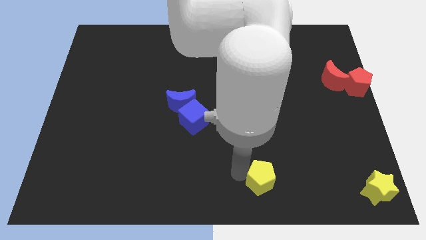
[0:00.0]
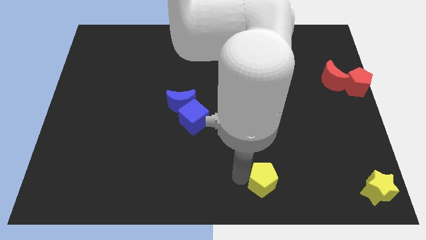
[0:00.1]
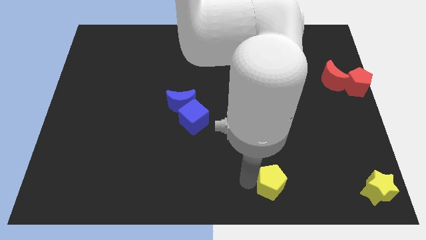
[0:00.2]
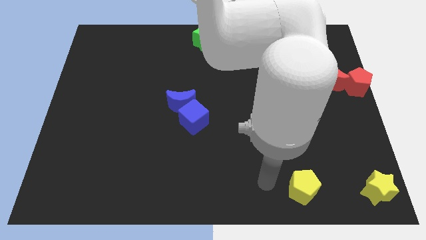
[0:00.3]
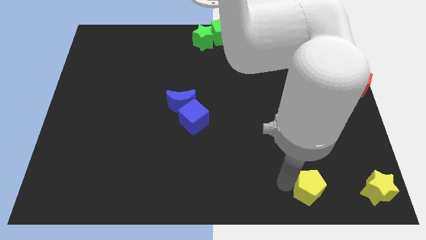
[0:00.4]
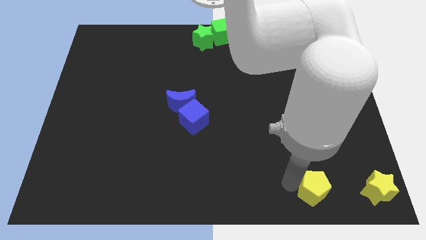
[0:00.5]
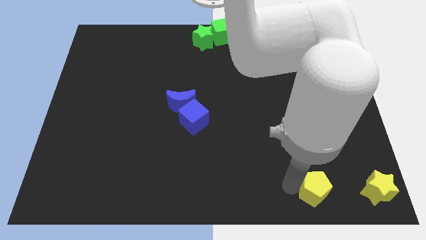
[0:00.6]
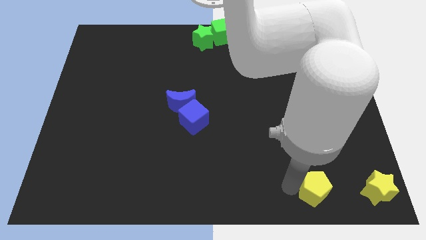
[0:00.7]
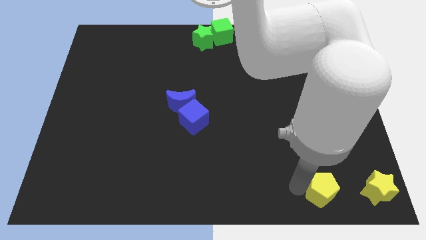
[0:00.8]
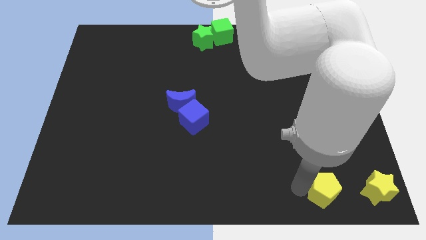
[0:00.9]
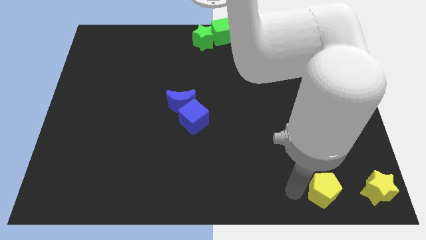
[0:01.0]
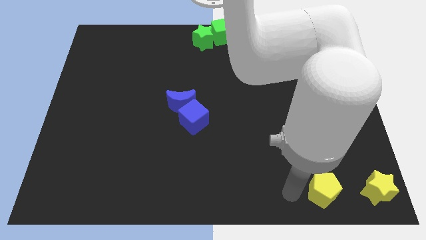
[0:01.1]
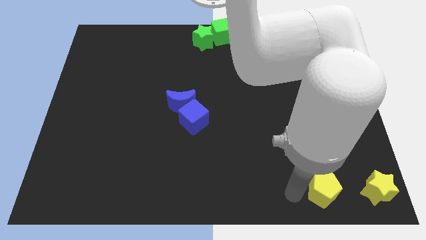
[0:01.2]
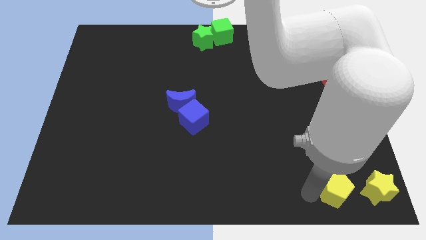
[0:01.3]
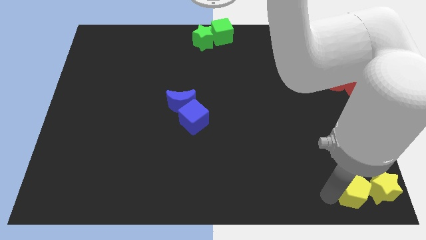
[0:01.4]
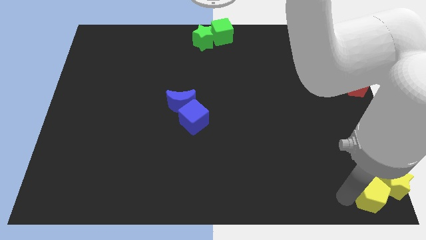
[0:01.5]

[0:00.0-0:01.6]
move the yellow pentagon into the yellow star

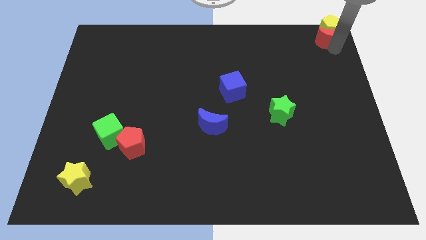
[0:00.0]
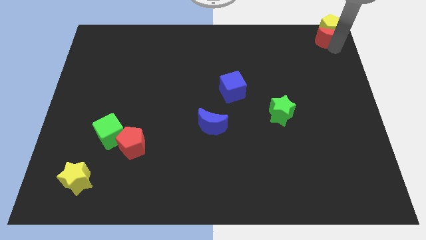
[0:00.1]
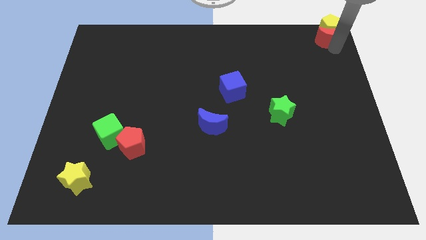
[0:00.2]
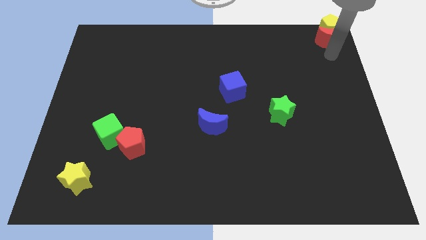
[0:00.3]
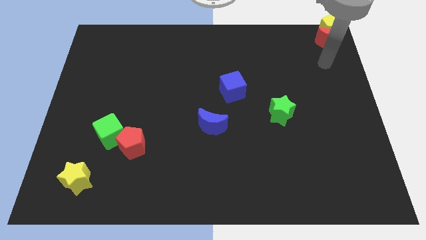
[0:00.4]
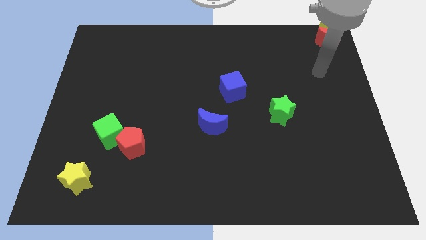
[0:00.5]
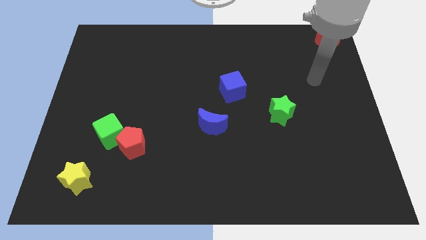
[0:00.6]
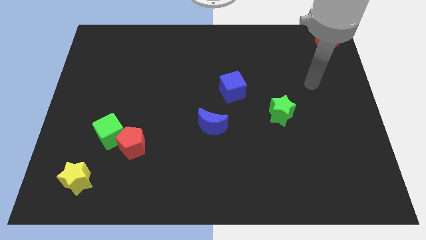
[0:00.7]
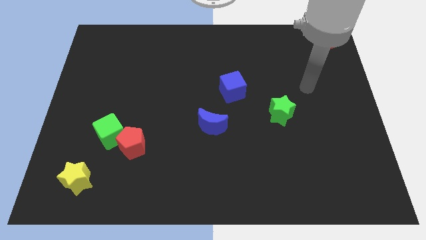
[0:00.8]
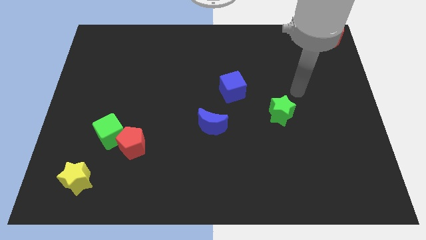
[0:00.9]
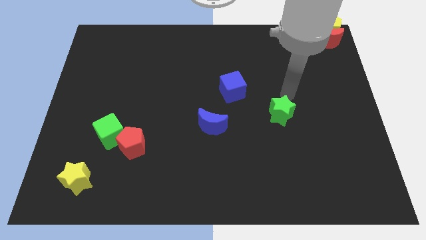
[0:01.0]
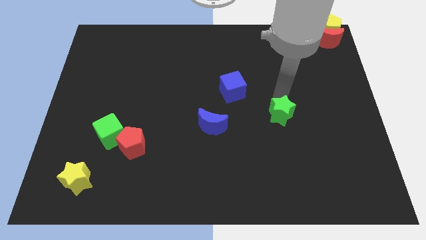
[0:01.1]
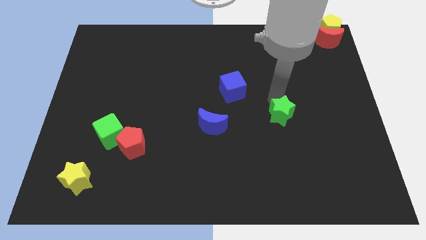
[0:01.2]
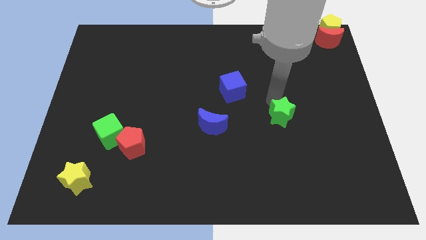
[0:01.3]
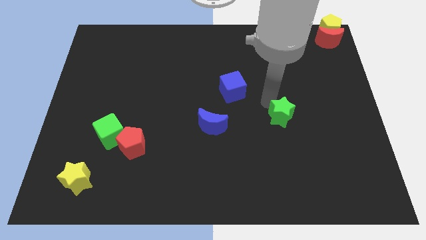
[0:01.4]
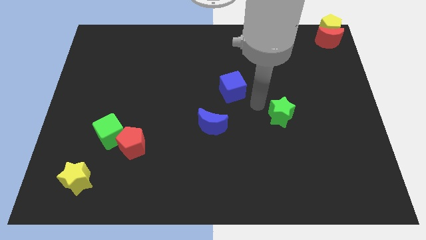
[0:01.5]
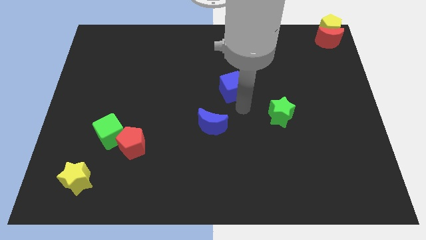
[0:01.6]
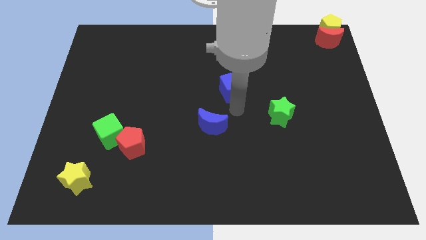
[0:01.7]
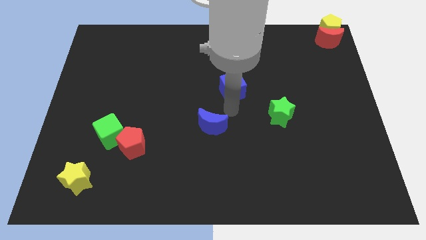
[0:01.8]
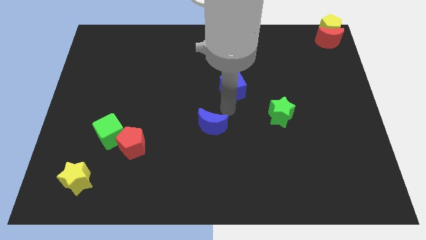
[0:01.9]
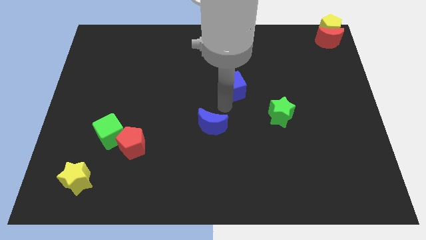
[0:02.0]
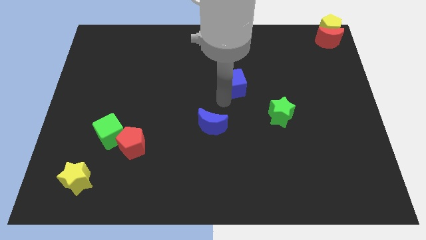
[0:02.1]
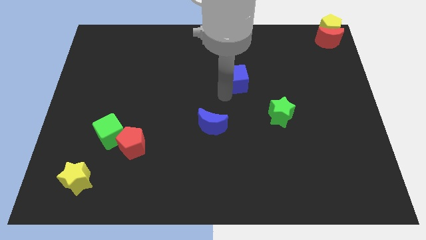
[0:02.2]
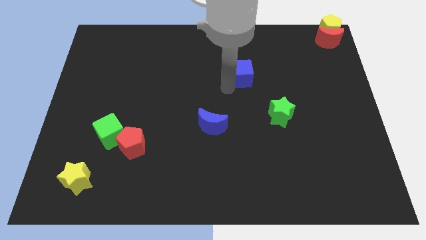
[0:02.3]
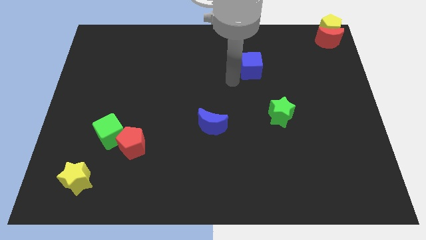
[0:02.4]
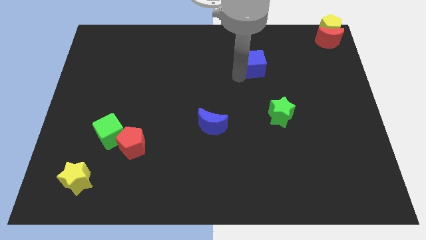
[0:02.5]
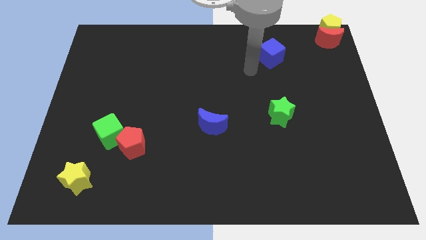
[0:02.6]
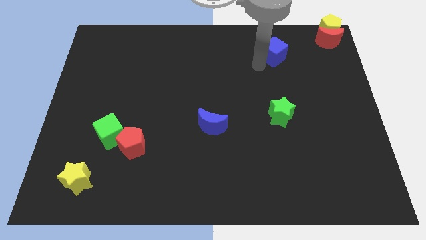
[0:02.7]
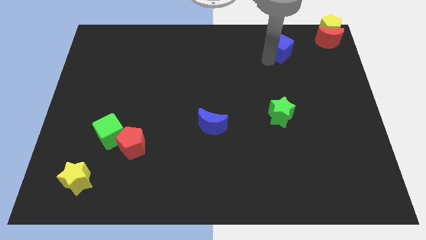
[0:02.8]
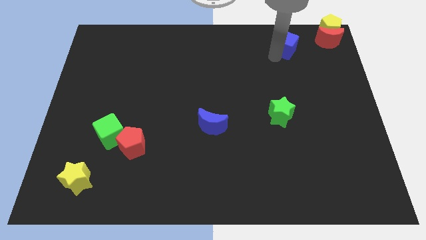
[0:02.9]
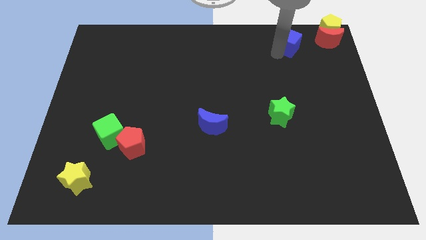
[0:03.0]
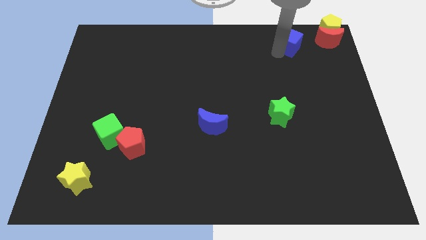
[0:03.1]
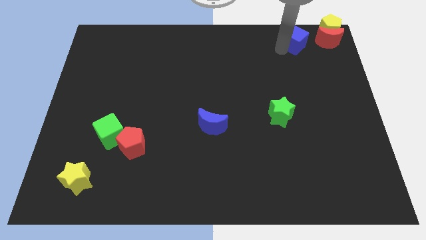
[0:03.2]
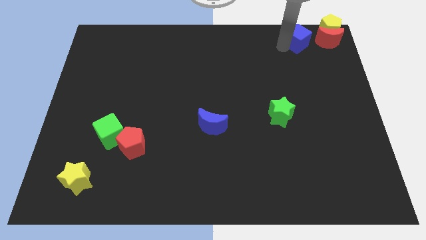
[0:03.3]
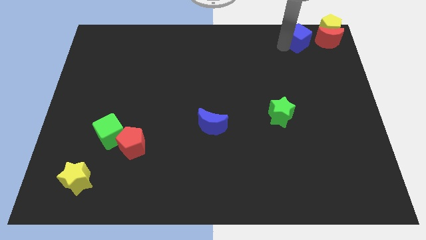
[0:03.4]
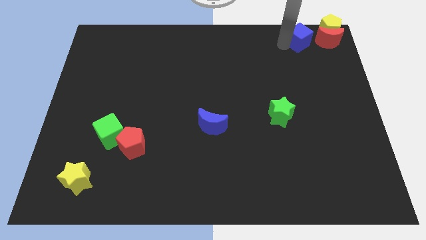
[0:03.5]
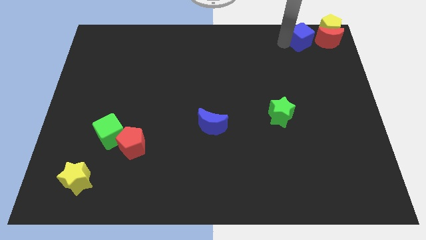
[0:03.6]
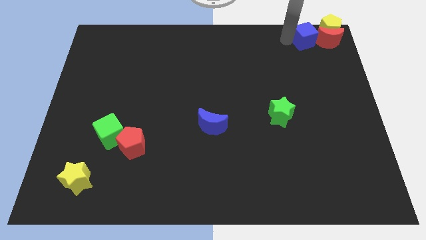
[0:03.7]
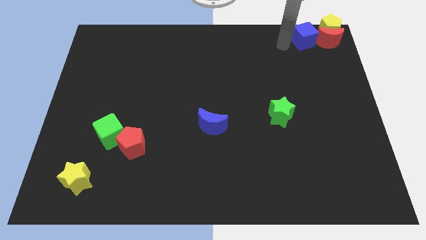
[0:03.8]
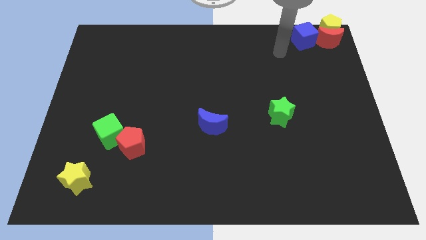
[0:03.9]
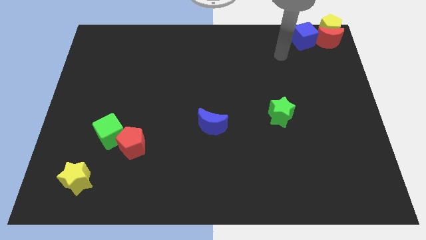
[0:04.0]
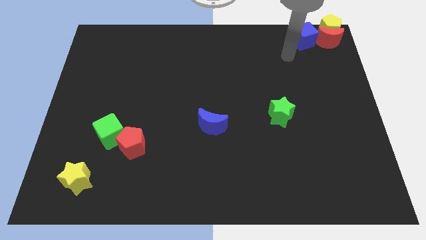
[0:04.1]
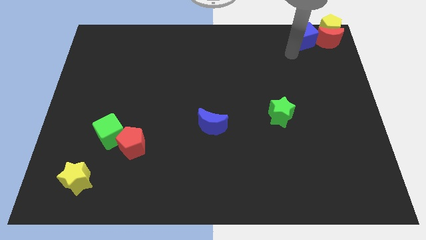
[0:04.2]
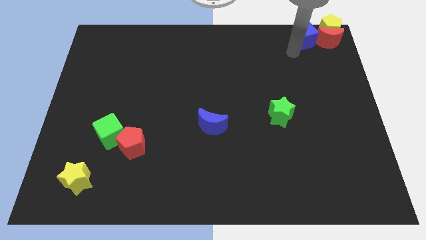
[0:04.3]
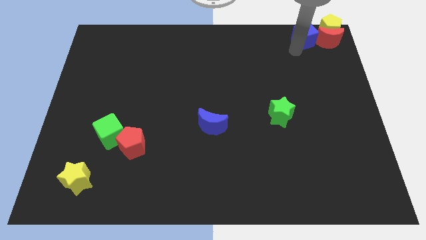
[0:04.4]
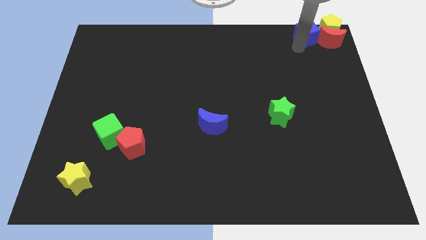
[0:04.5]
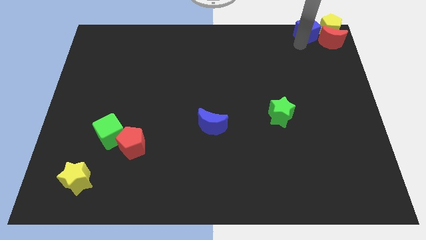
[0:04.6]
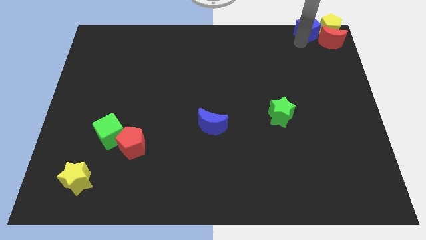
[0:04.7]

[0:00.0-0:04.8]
group up the blue cube with the red moon and yellow pentagon at the top right of the table

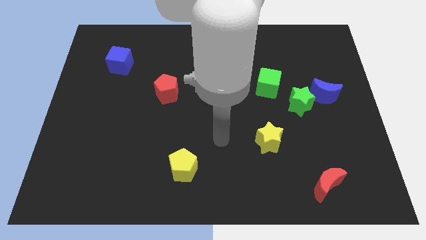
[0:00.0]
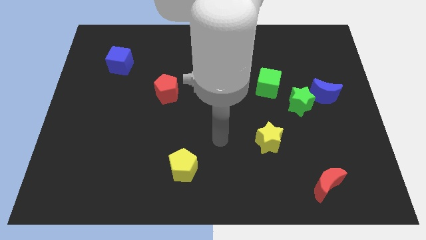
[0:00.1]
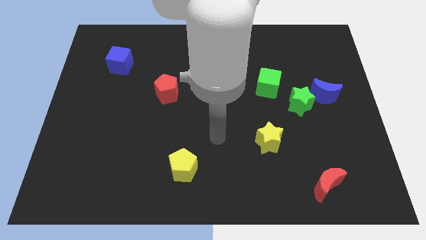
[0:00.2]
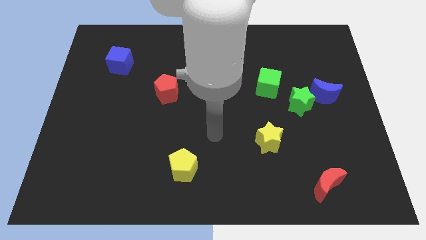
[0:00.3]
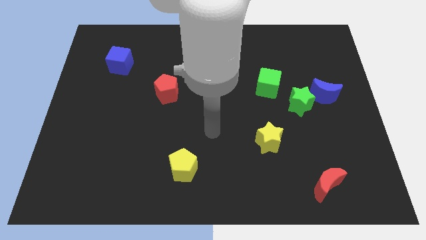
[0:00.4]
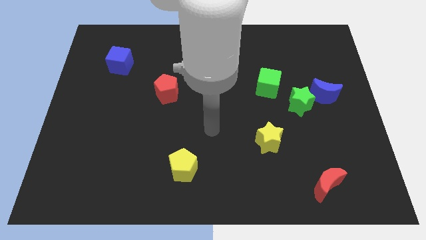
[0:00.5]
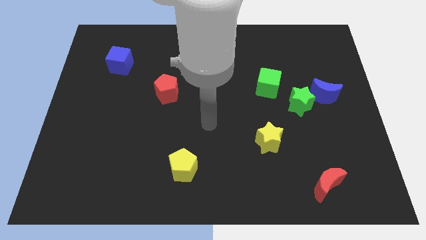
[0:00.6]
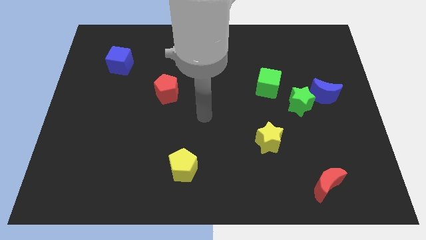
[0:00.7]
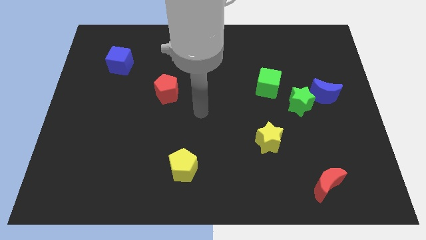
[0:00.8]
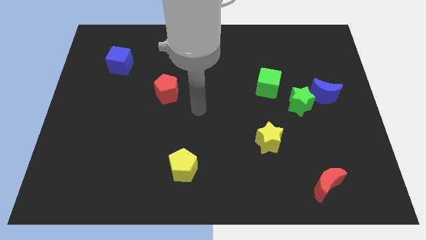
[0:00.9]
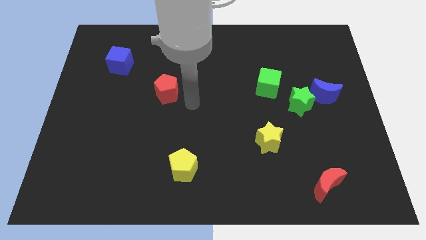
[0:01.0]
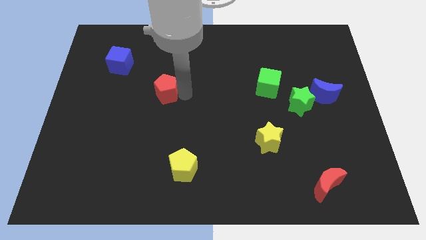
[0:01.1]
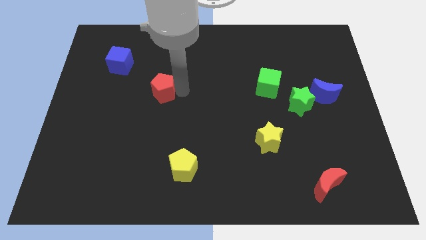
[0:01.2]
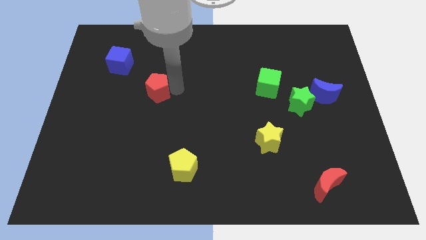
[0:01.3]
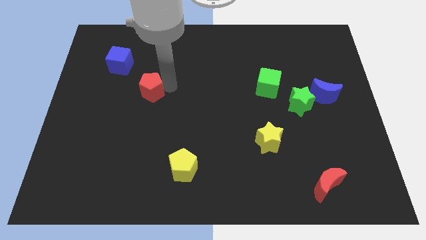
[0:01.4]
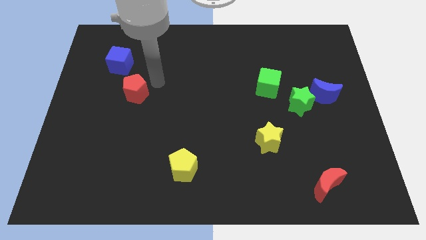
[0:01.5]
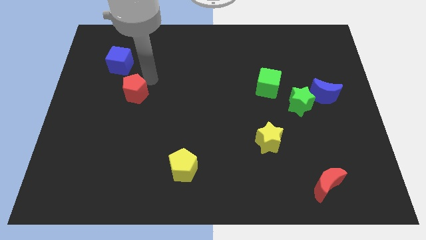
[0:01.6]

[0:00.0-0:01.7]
move your arm beside the red pentagon

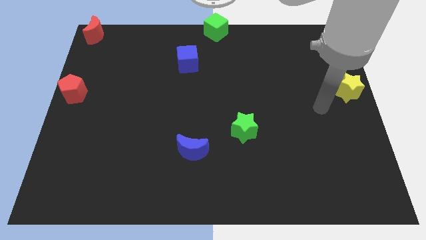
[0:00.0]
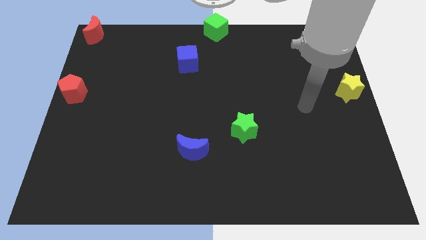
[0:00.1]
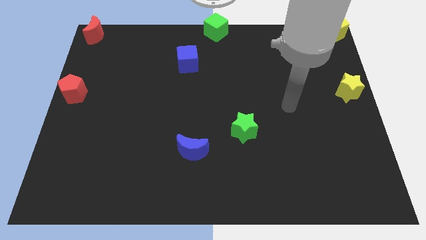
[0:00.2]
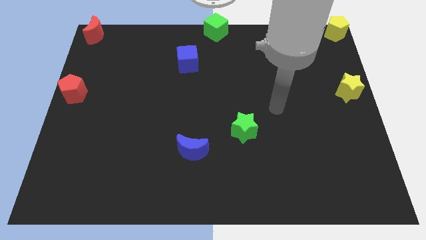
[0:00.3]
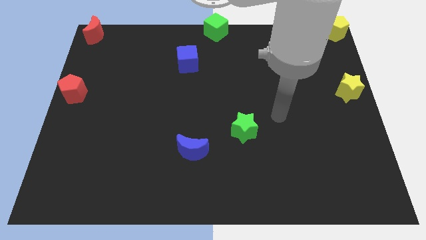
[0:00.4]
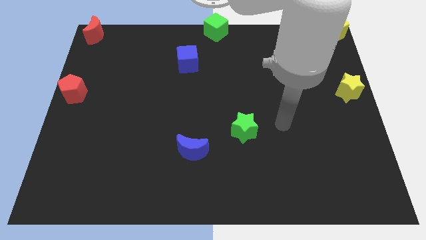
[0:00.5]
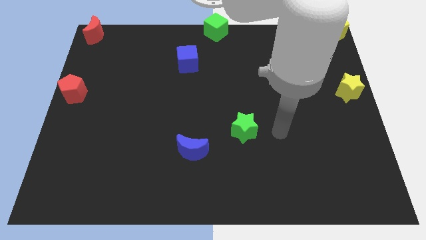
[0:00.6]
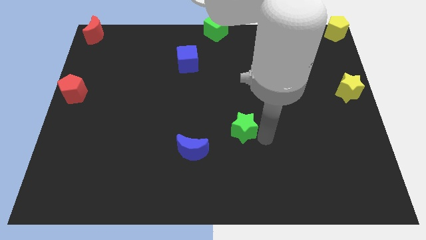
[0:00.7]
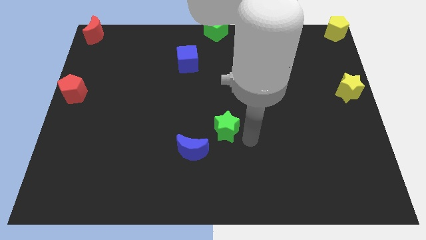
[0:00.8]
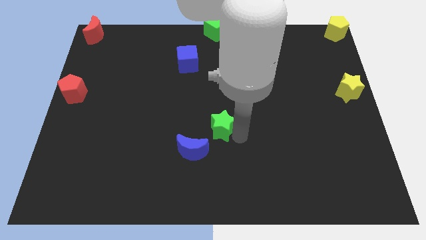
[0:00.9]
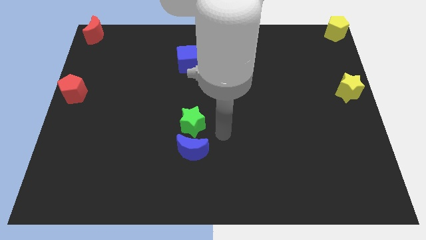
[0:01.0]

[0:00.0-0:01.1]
move the green star diagonal to the blue moon
